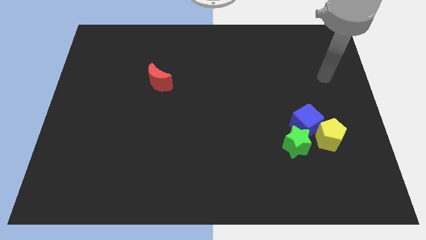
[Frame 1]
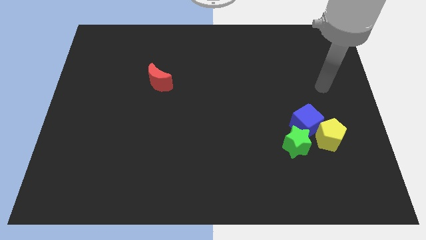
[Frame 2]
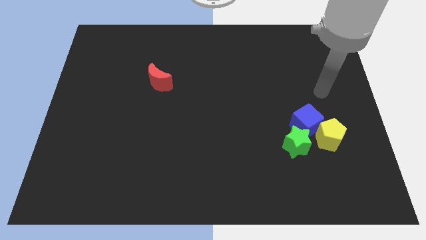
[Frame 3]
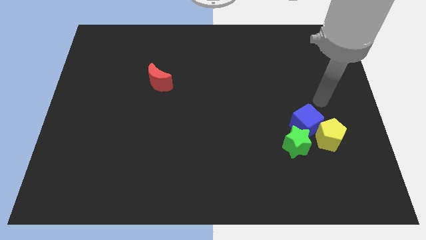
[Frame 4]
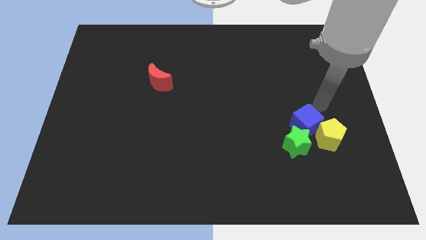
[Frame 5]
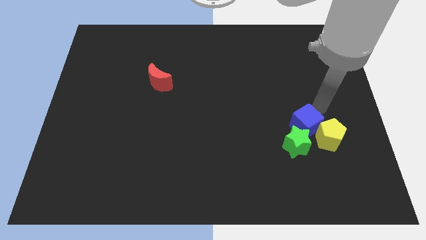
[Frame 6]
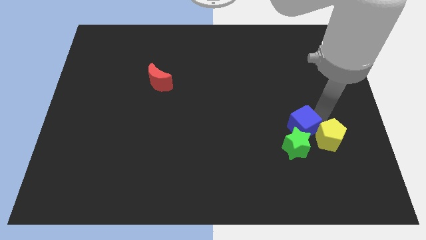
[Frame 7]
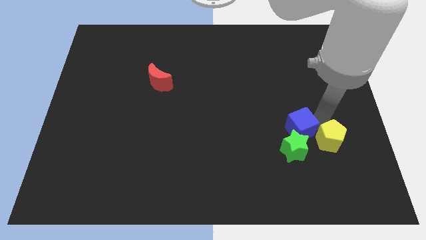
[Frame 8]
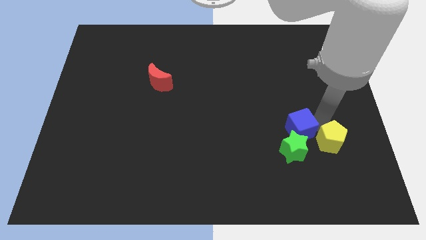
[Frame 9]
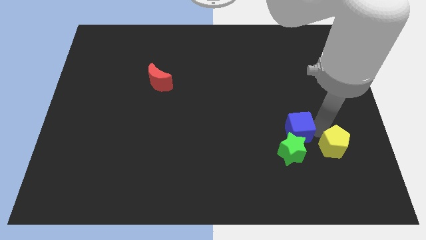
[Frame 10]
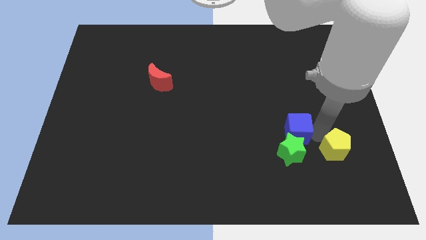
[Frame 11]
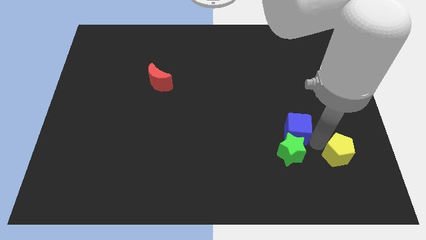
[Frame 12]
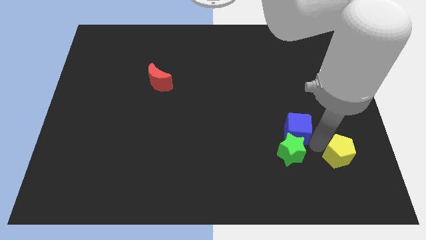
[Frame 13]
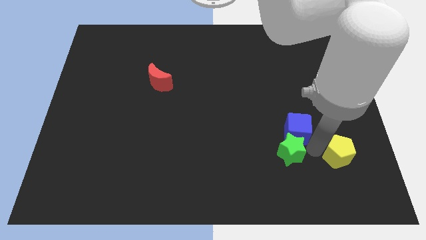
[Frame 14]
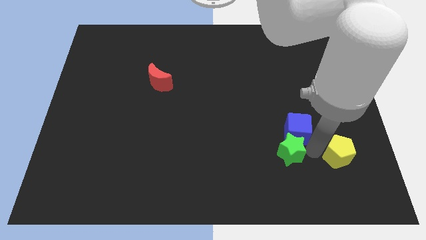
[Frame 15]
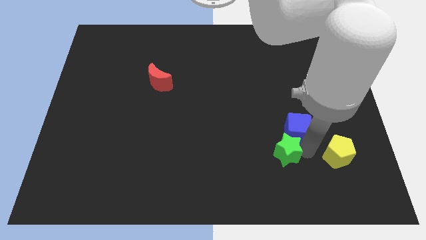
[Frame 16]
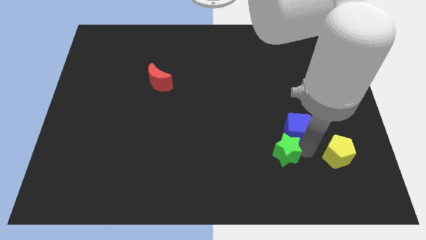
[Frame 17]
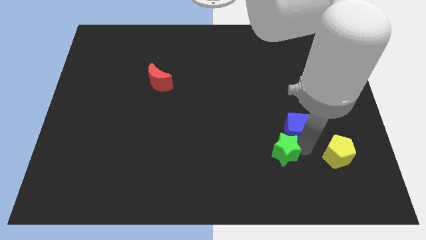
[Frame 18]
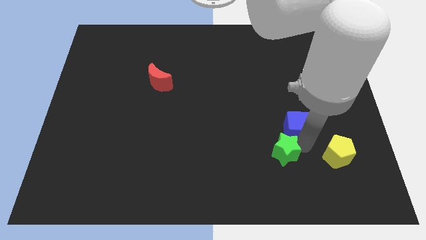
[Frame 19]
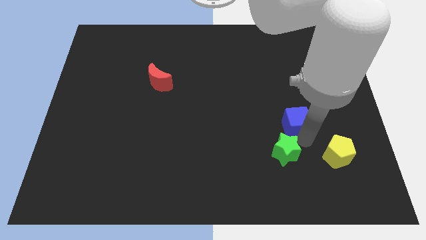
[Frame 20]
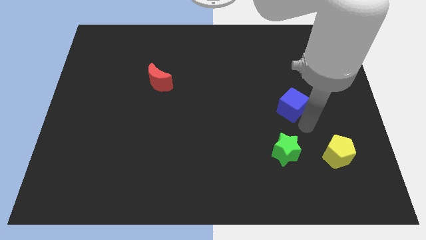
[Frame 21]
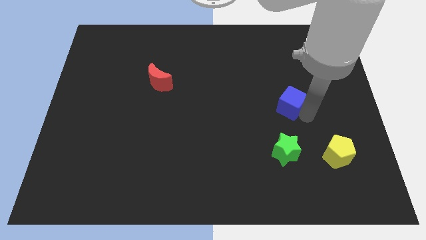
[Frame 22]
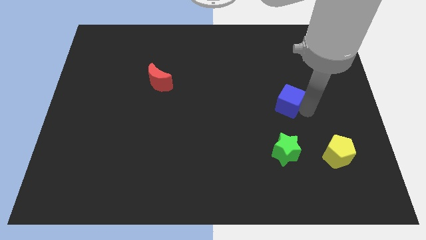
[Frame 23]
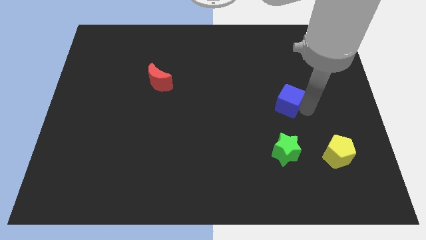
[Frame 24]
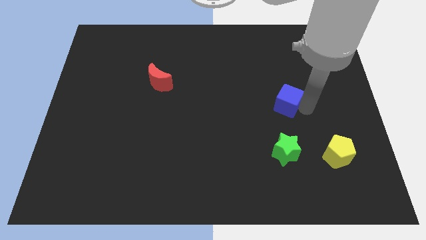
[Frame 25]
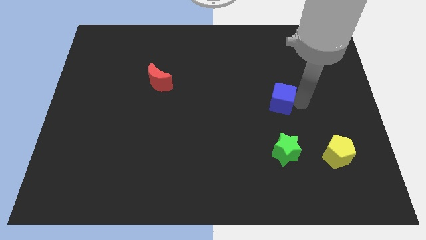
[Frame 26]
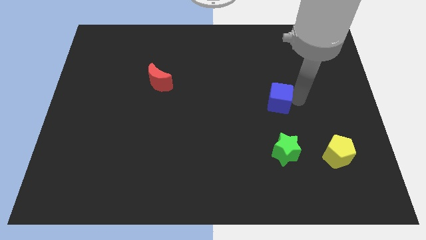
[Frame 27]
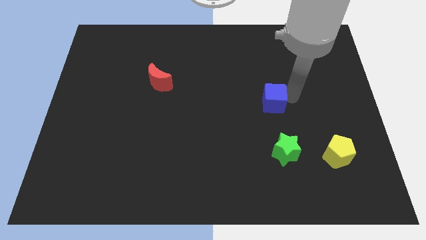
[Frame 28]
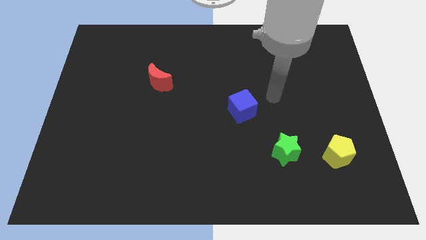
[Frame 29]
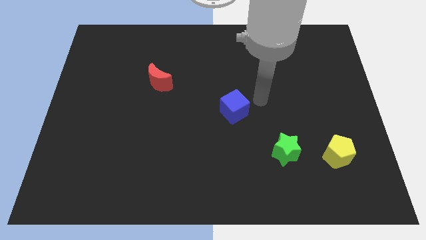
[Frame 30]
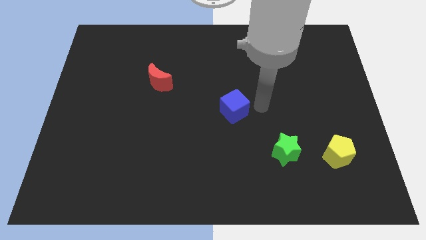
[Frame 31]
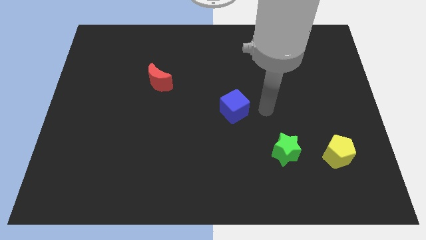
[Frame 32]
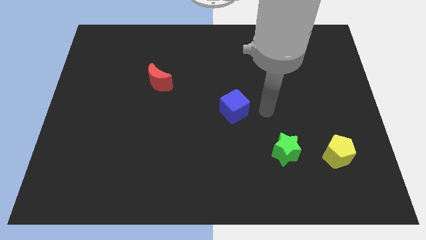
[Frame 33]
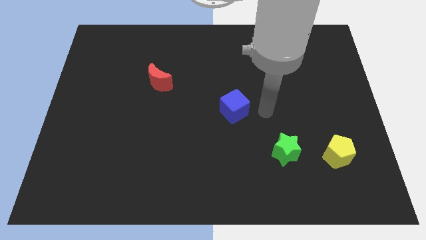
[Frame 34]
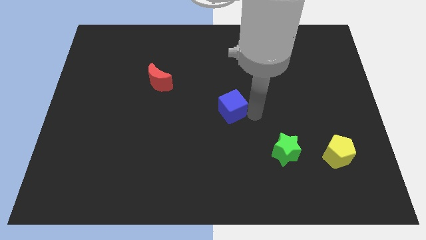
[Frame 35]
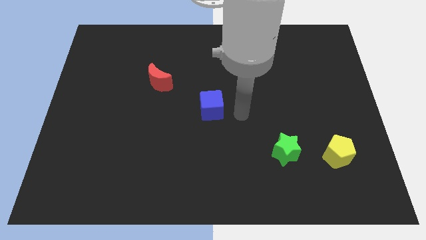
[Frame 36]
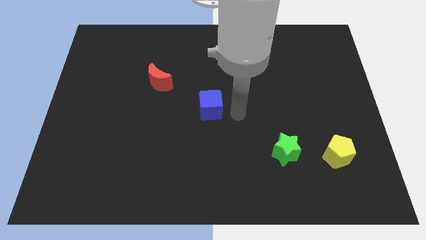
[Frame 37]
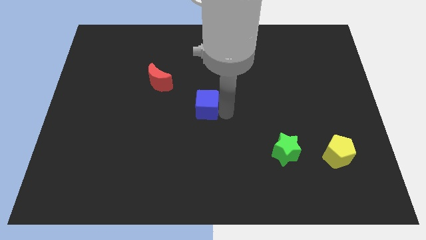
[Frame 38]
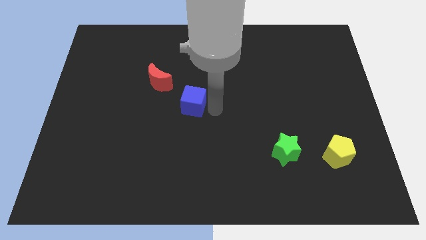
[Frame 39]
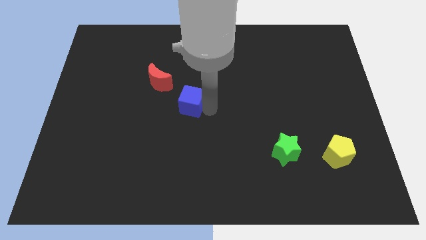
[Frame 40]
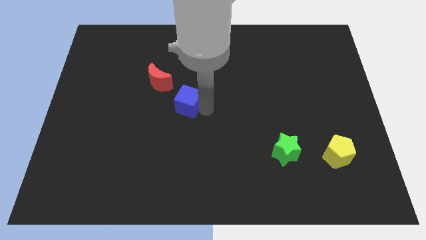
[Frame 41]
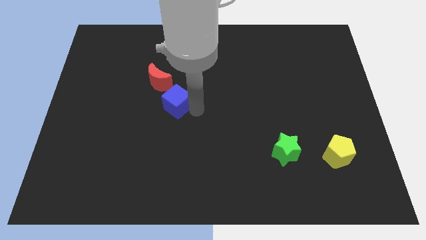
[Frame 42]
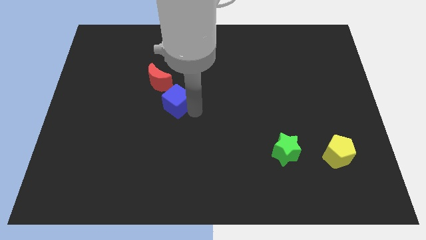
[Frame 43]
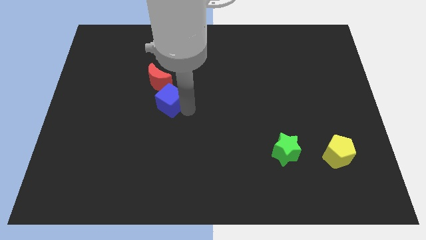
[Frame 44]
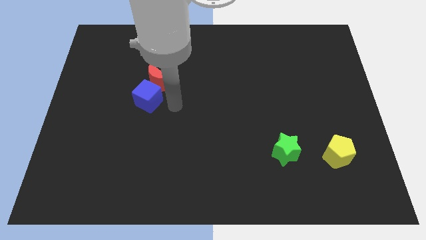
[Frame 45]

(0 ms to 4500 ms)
put the blue cube next to the red block

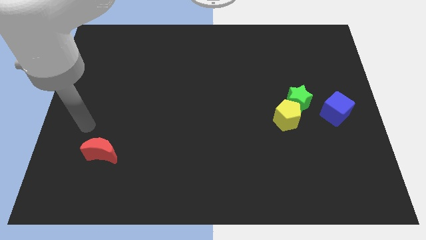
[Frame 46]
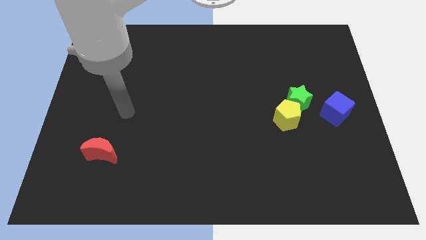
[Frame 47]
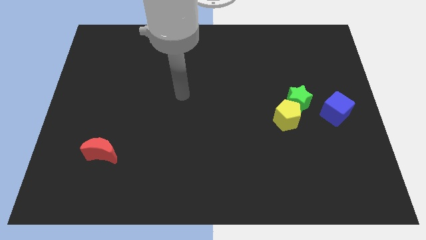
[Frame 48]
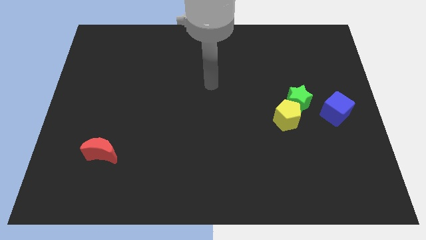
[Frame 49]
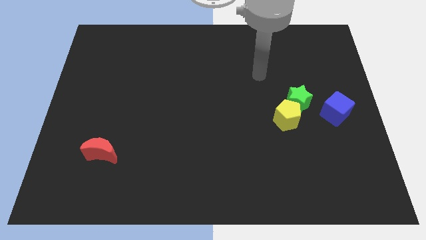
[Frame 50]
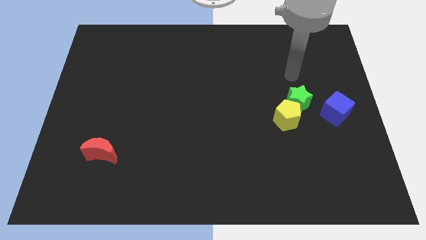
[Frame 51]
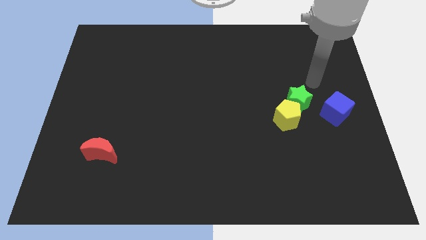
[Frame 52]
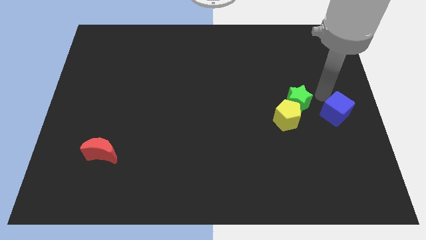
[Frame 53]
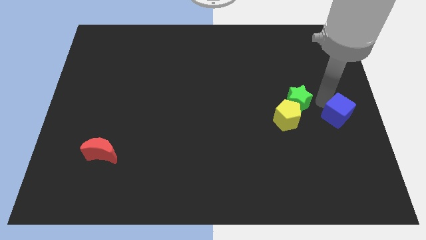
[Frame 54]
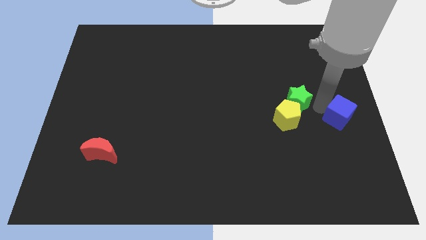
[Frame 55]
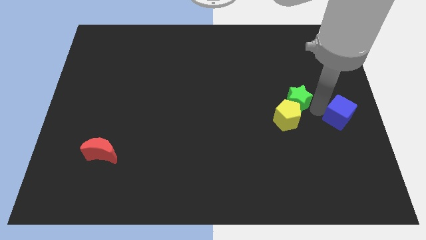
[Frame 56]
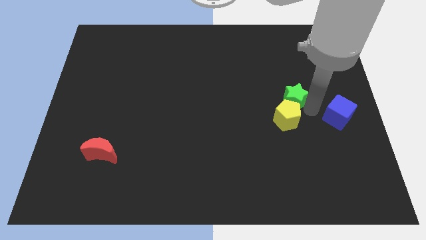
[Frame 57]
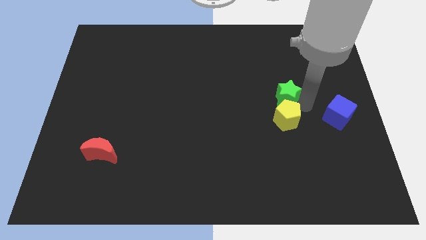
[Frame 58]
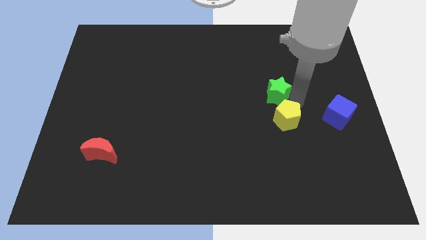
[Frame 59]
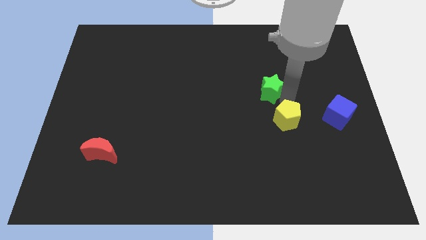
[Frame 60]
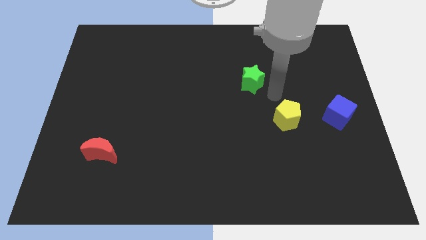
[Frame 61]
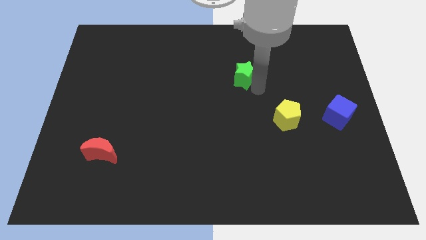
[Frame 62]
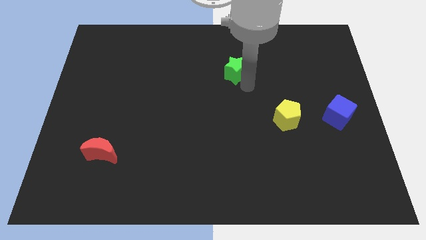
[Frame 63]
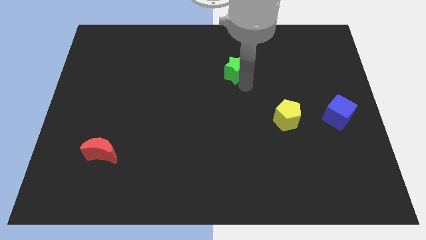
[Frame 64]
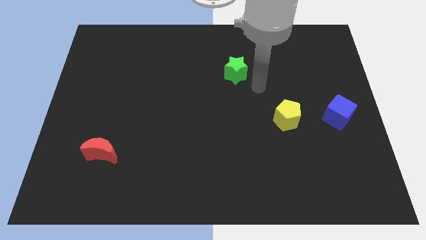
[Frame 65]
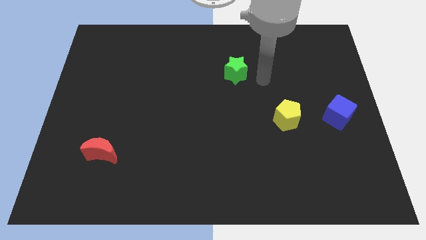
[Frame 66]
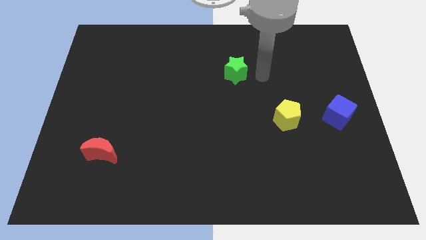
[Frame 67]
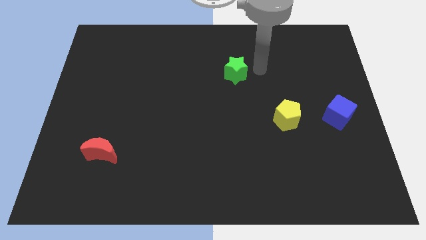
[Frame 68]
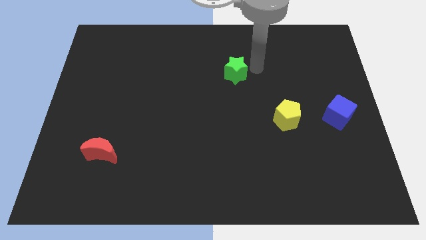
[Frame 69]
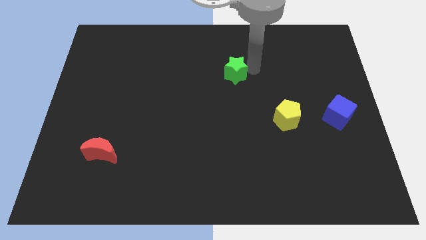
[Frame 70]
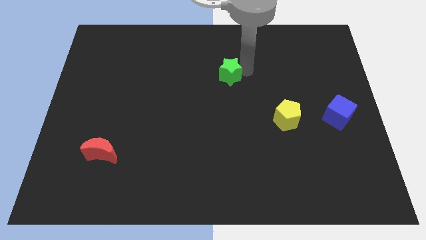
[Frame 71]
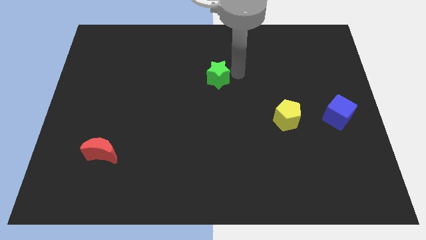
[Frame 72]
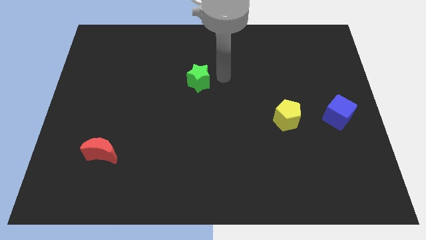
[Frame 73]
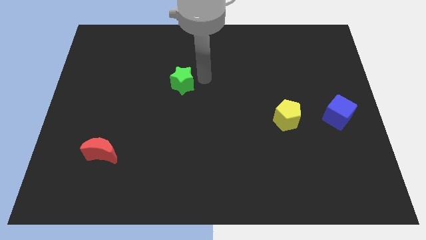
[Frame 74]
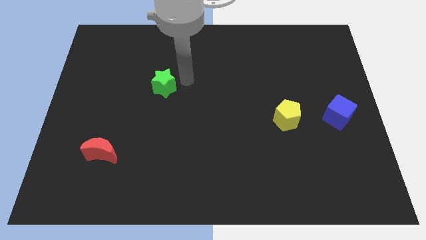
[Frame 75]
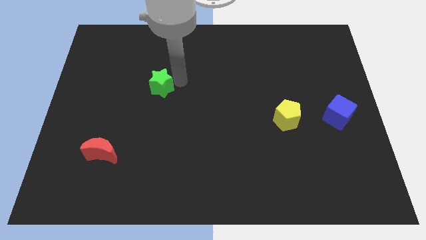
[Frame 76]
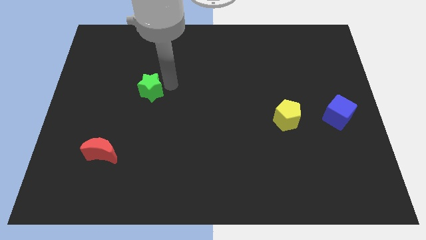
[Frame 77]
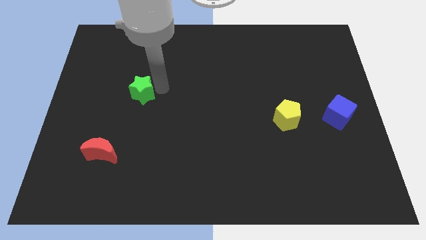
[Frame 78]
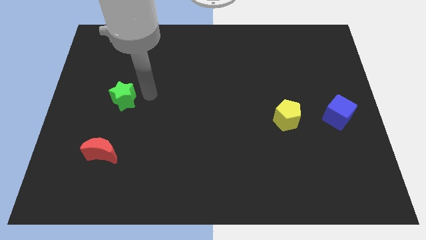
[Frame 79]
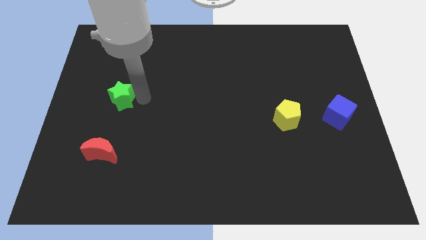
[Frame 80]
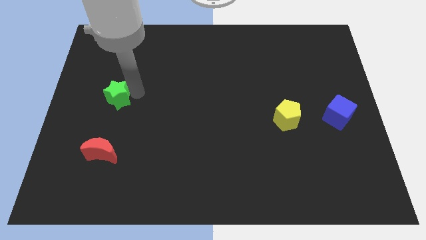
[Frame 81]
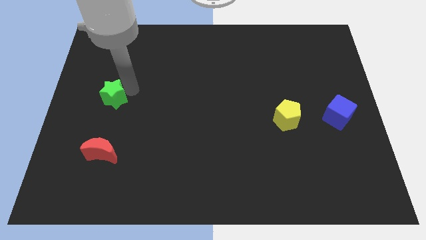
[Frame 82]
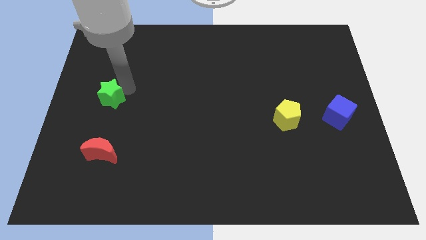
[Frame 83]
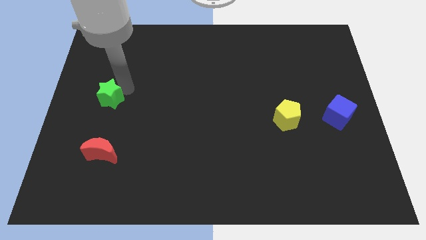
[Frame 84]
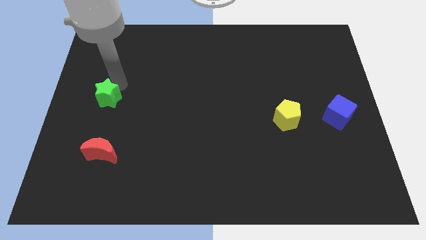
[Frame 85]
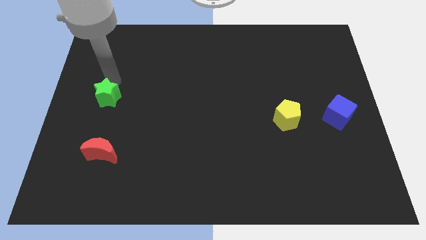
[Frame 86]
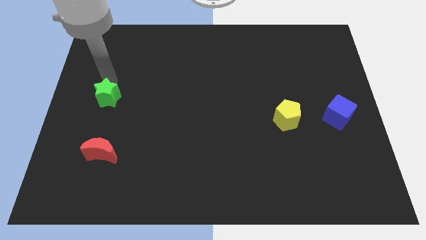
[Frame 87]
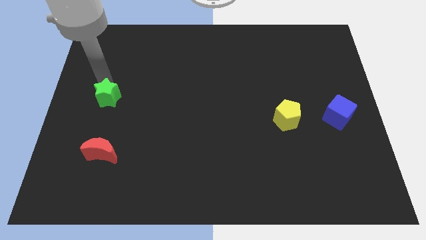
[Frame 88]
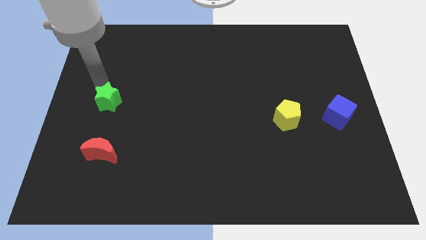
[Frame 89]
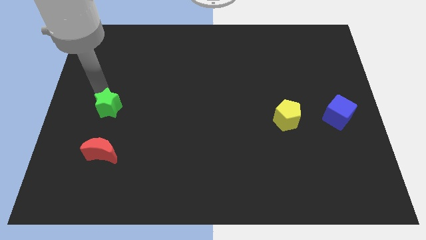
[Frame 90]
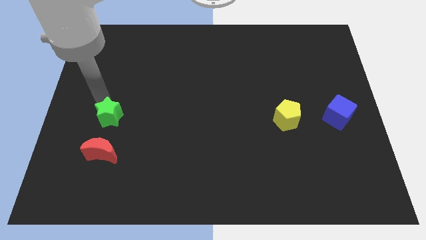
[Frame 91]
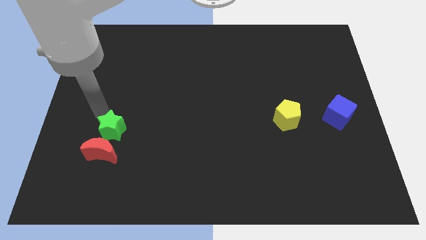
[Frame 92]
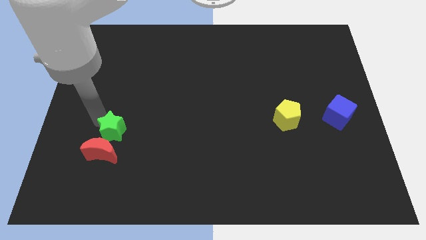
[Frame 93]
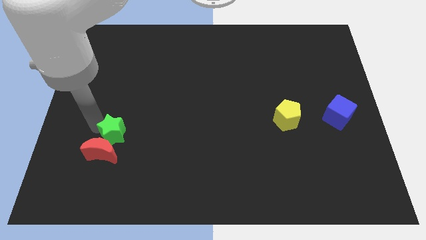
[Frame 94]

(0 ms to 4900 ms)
slide the green star to the red block
